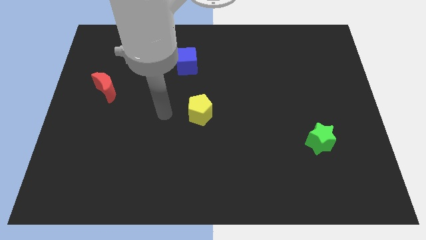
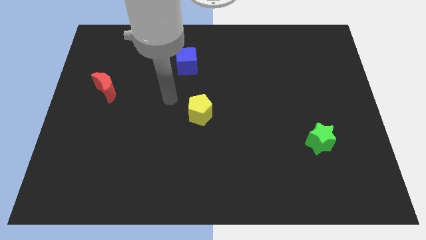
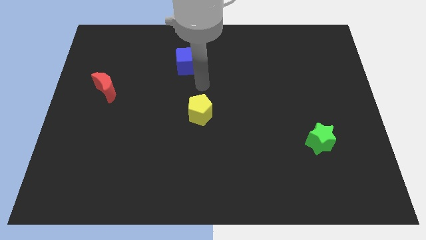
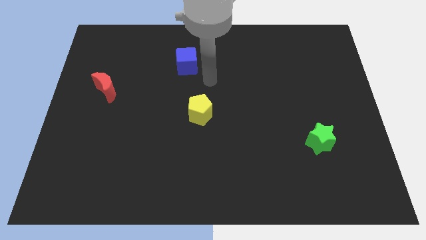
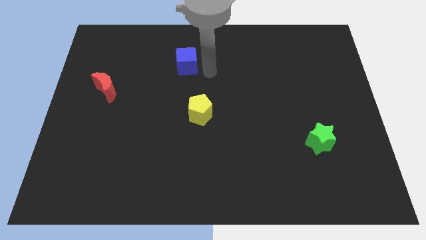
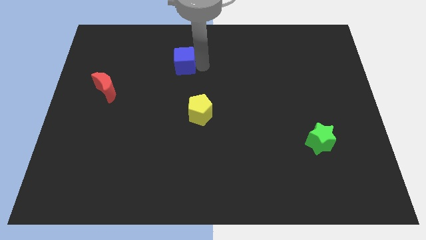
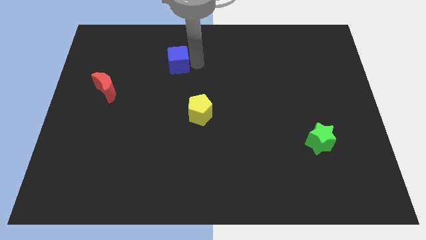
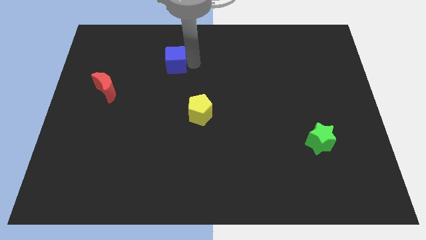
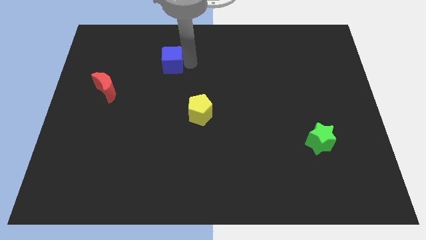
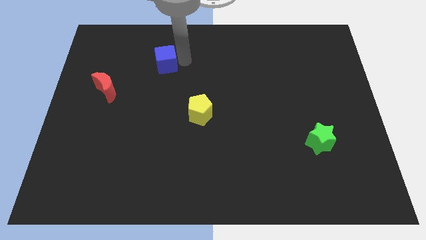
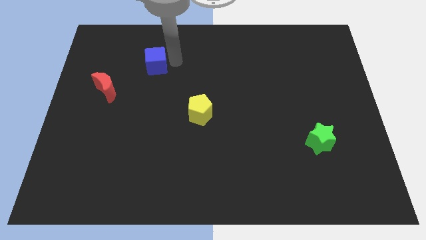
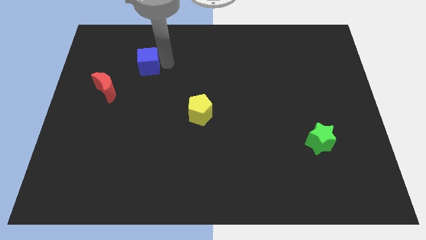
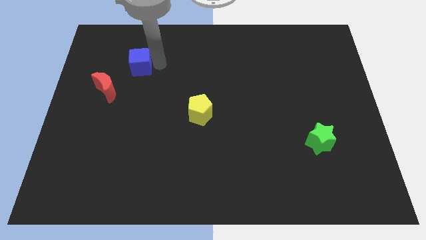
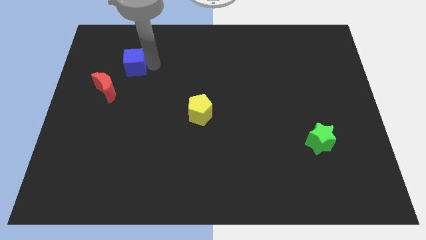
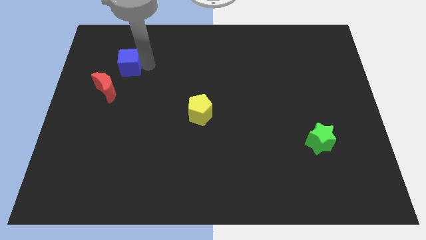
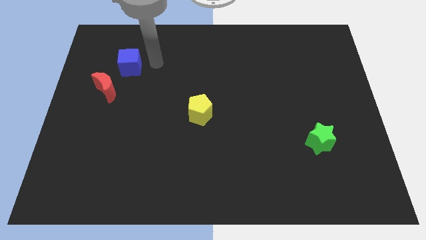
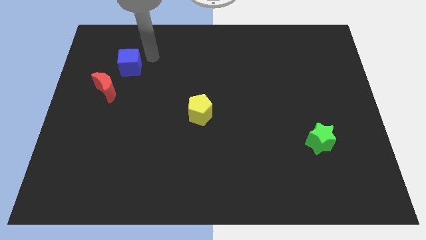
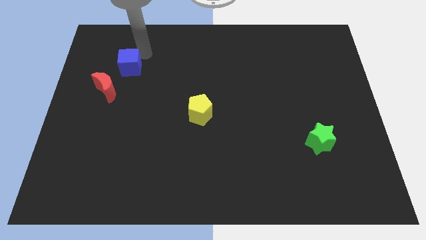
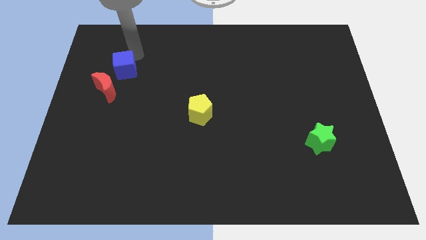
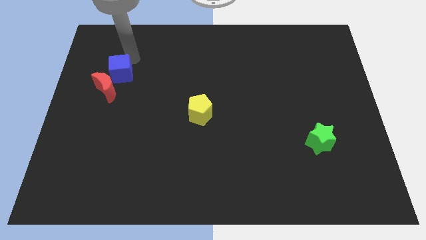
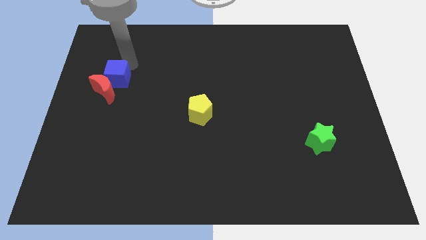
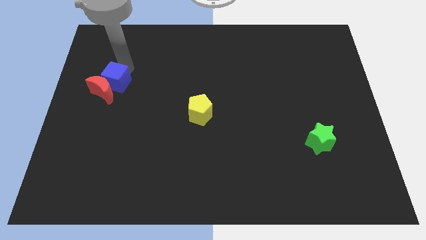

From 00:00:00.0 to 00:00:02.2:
slide the cube close to the red block

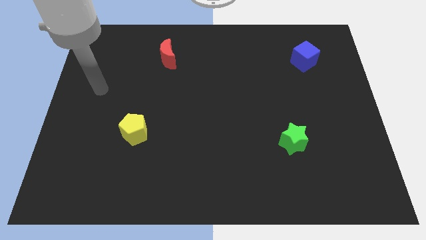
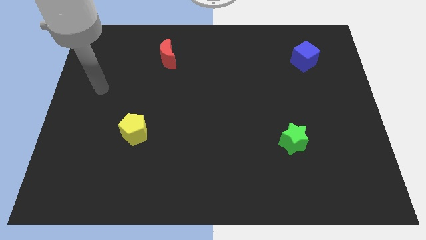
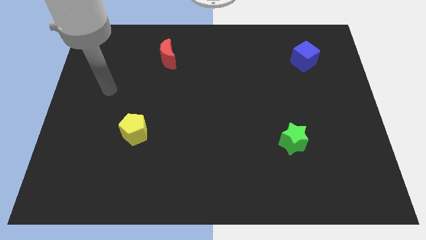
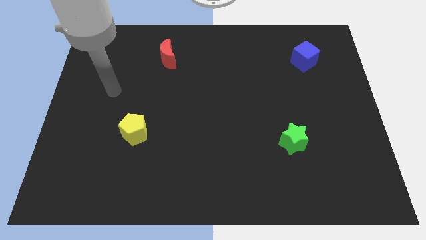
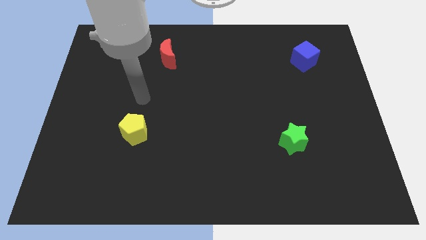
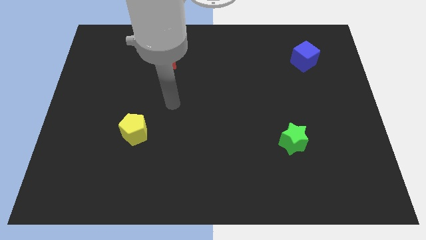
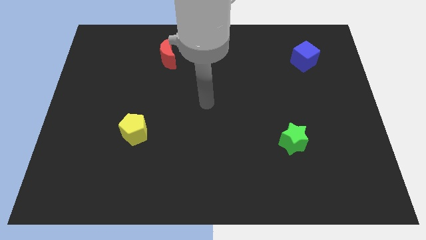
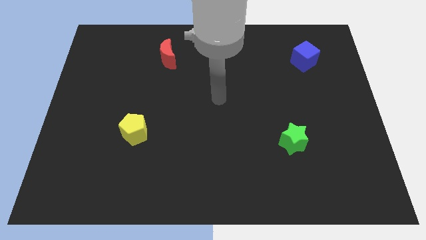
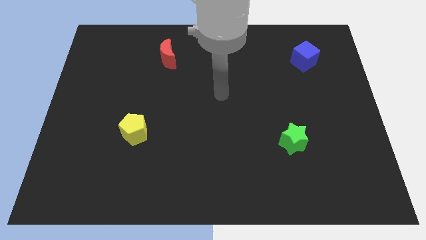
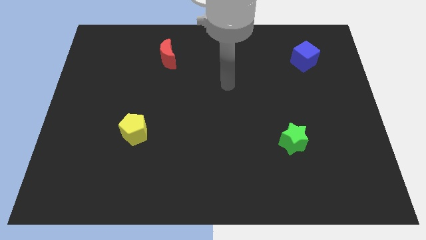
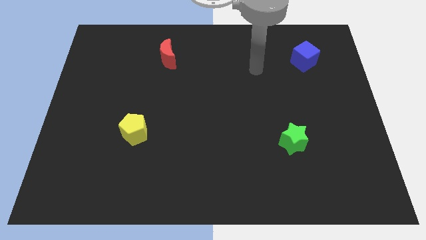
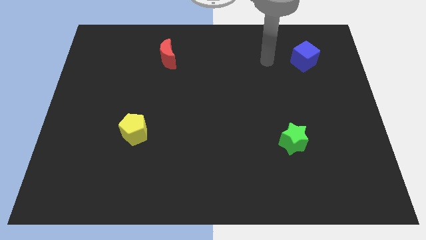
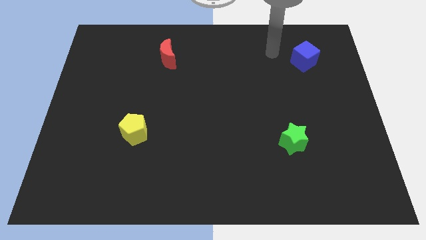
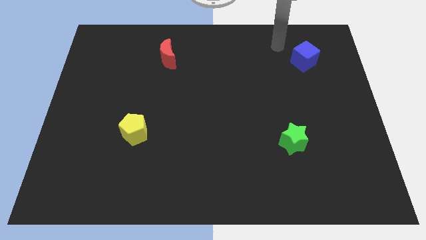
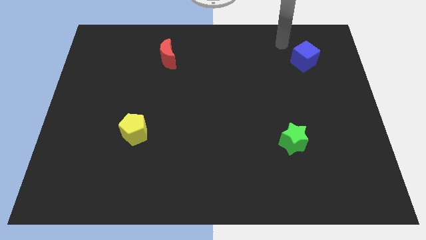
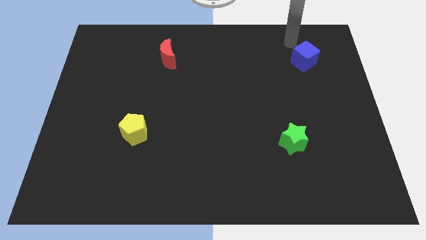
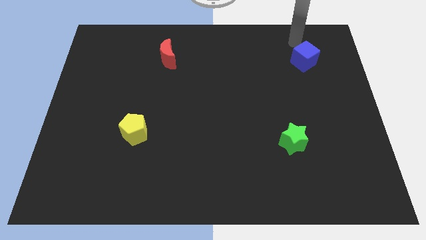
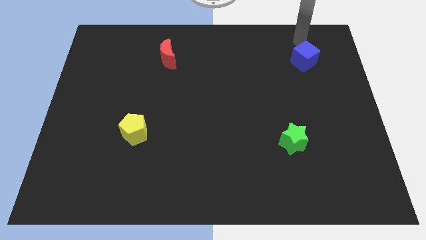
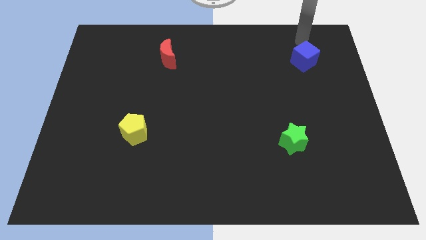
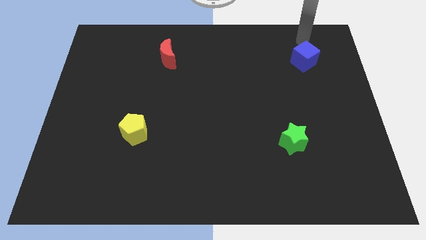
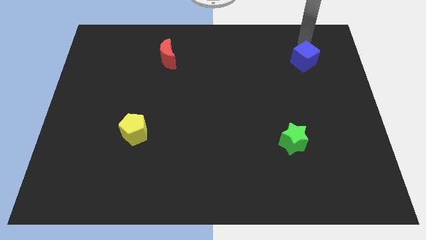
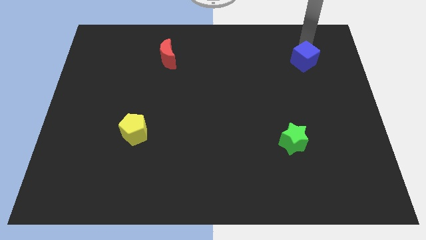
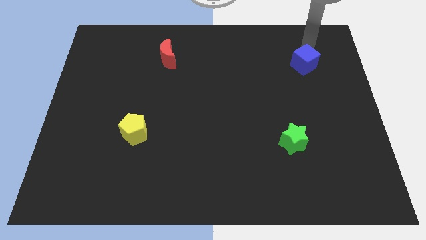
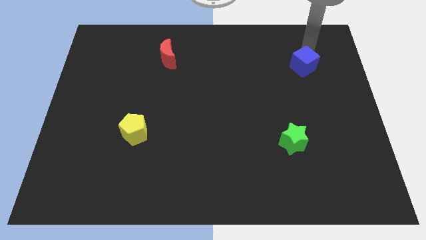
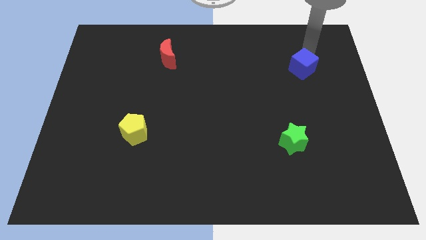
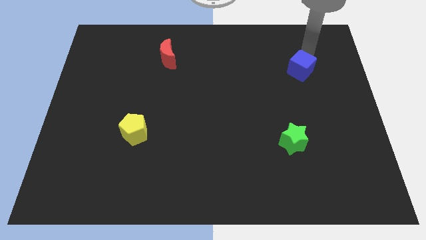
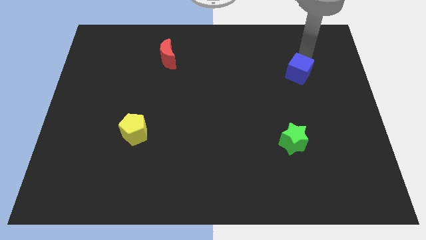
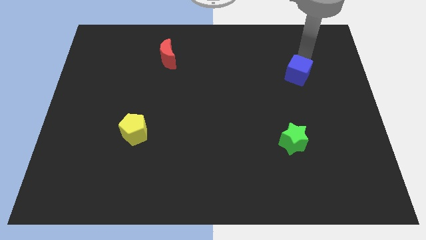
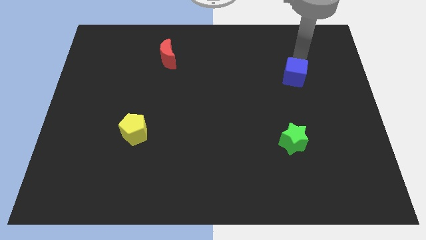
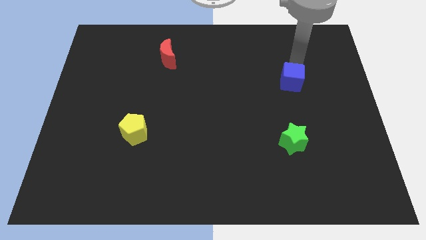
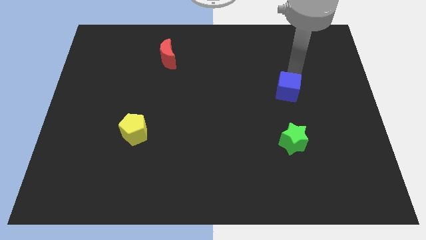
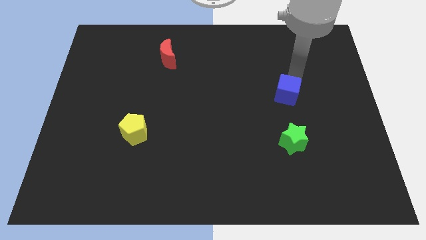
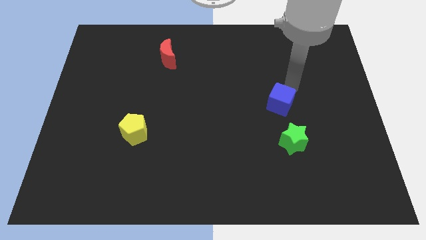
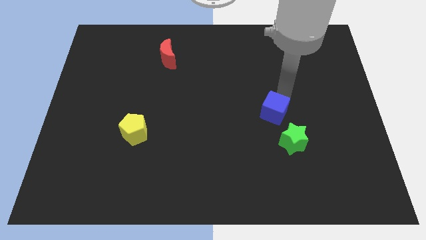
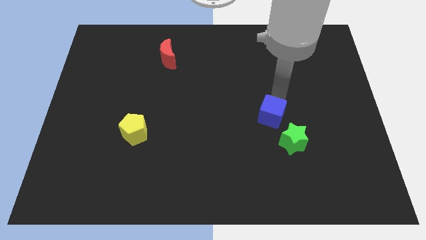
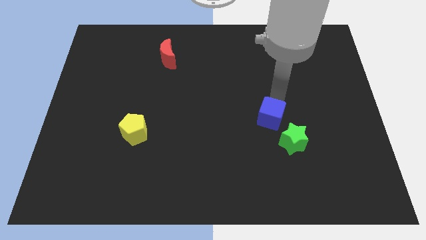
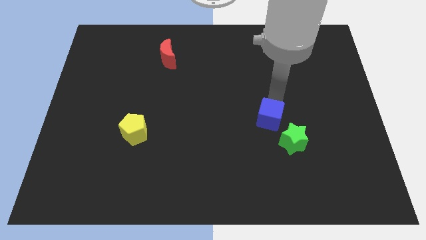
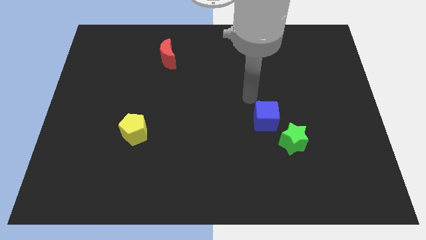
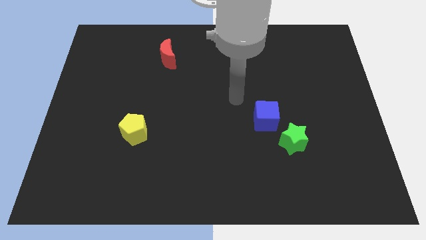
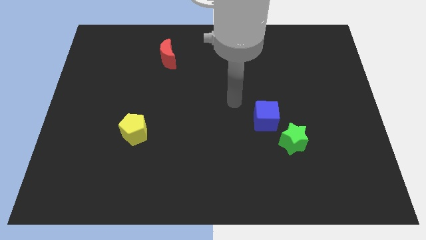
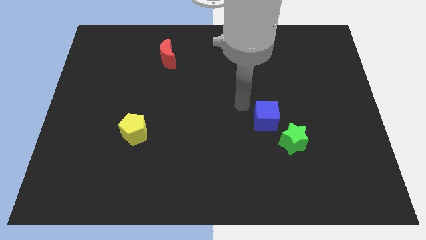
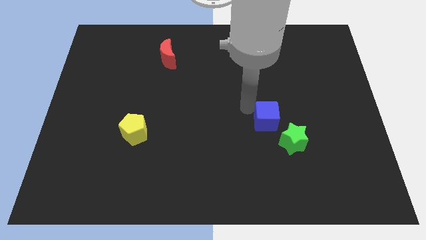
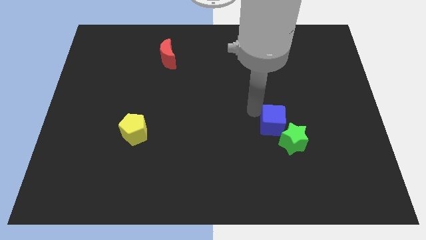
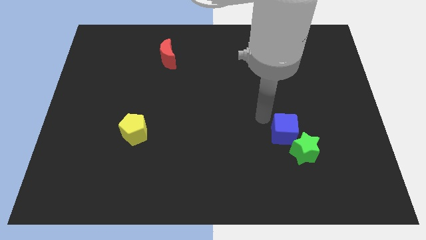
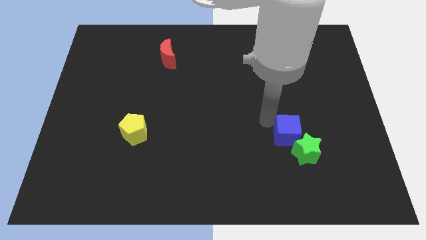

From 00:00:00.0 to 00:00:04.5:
slide the blue block next to the star

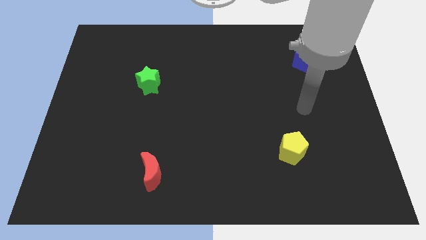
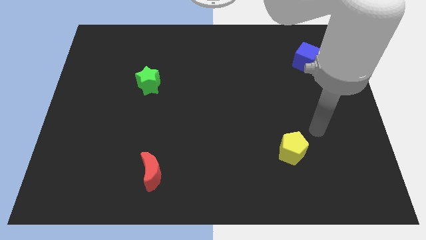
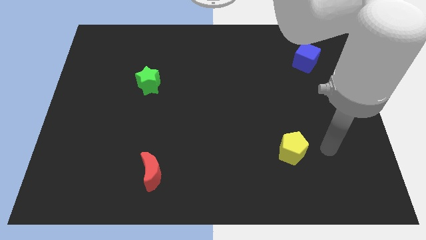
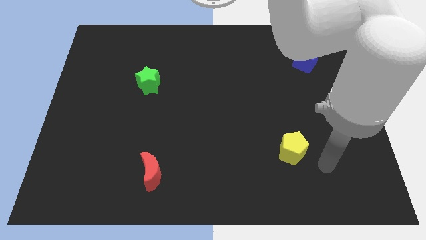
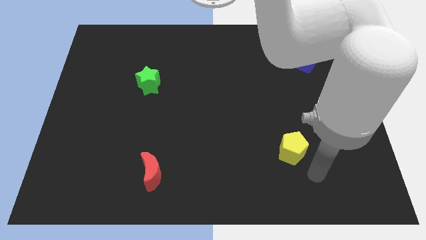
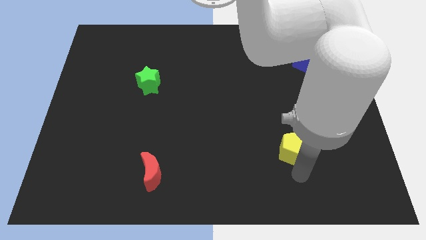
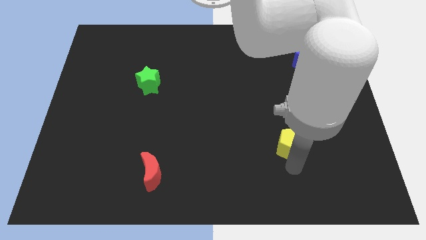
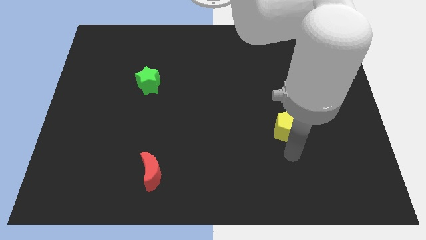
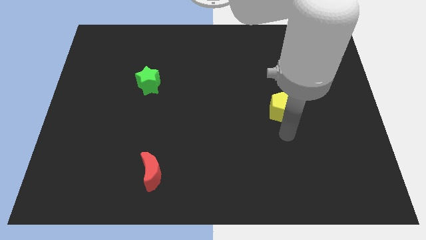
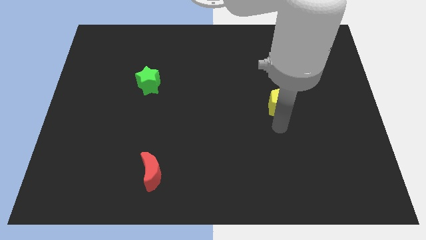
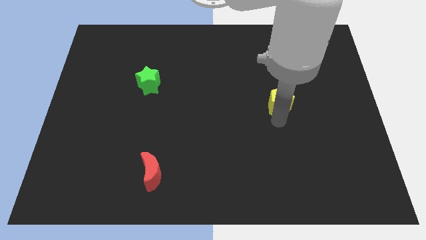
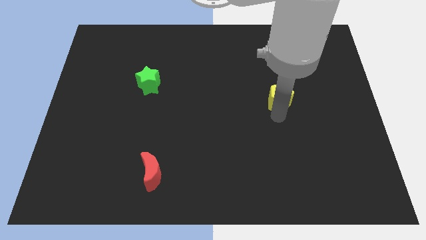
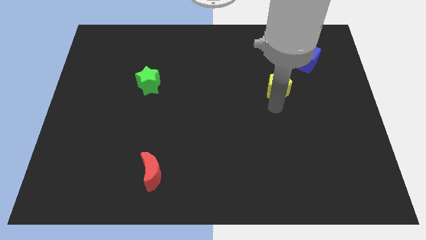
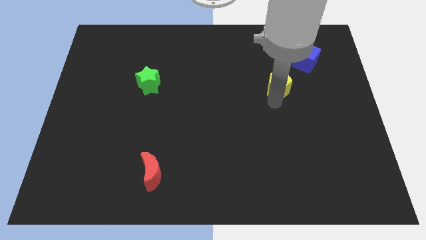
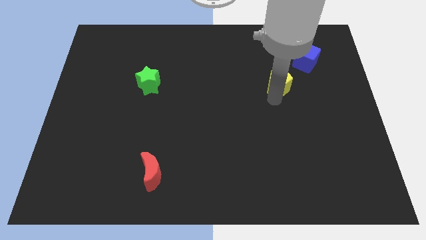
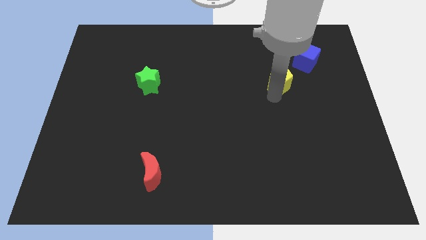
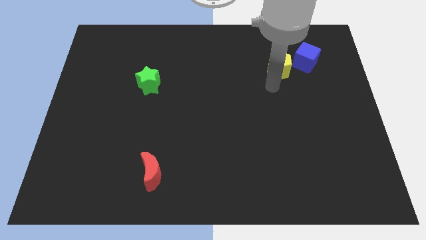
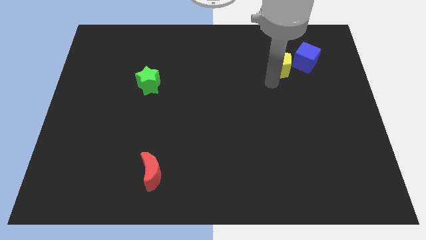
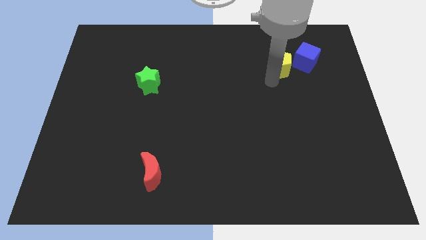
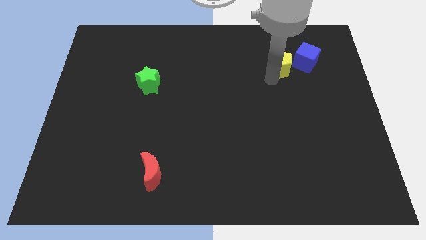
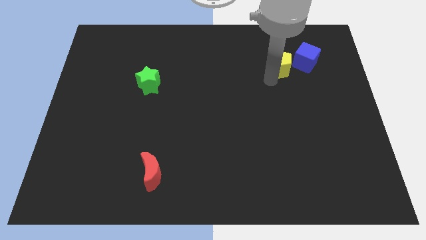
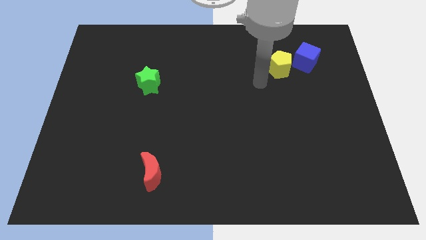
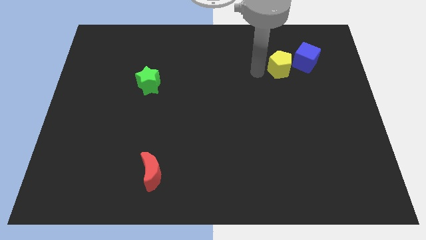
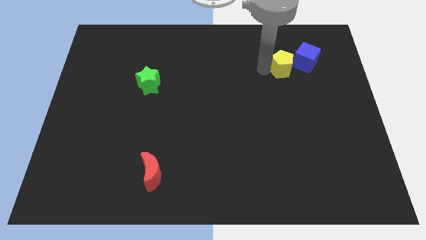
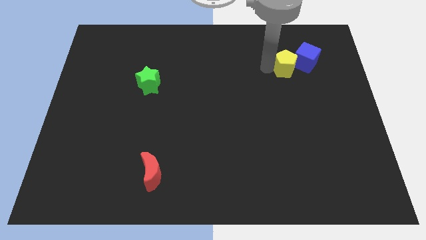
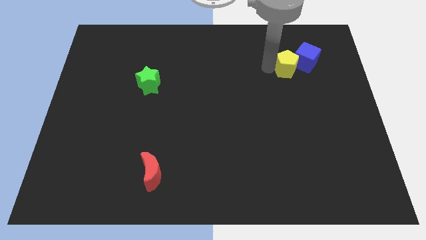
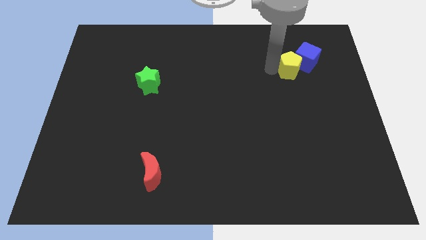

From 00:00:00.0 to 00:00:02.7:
put the yellow block to the blue cube
